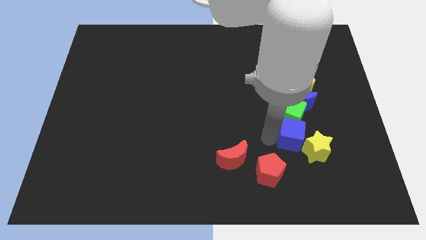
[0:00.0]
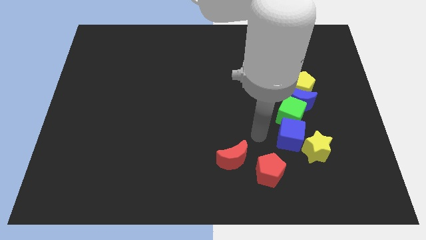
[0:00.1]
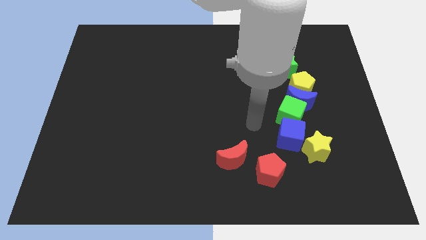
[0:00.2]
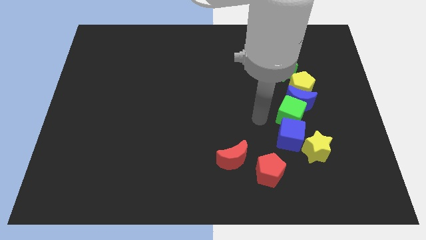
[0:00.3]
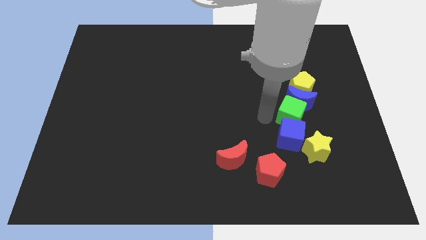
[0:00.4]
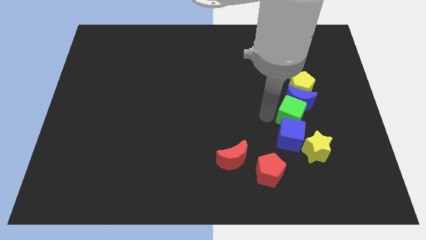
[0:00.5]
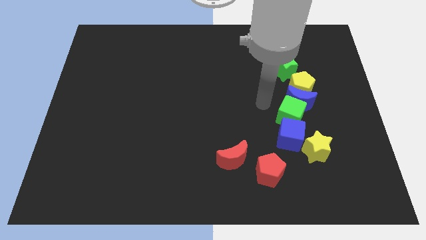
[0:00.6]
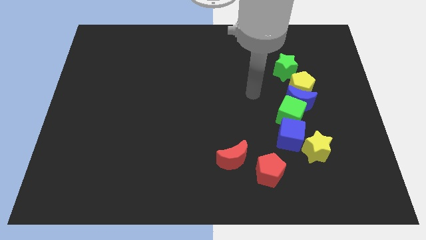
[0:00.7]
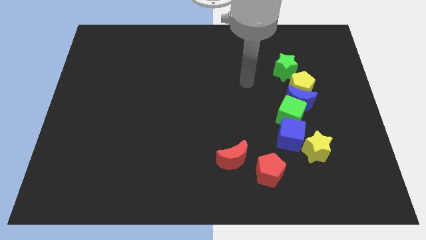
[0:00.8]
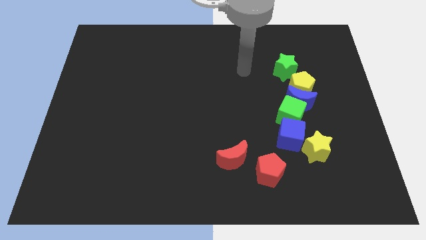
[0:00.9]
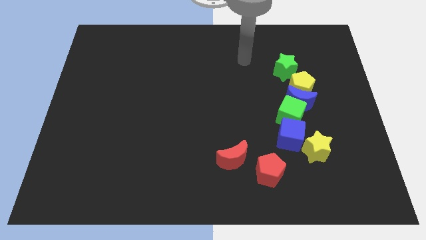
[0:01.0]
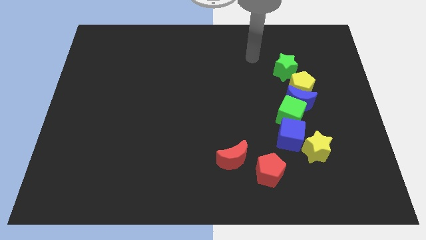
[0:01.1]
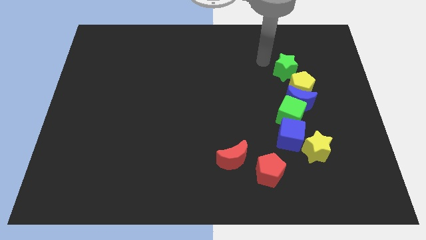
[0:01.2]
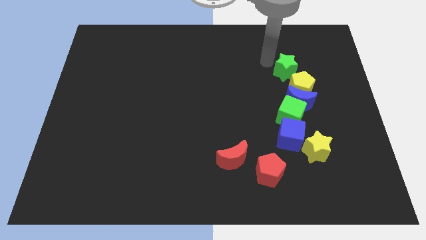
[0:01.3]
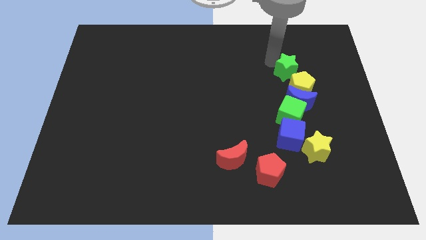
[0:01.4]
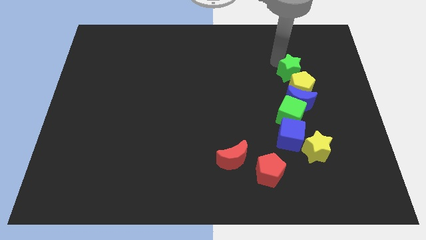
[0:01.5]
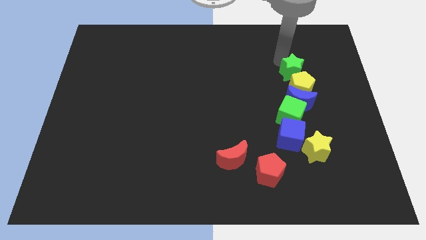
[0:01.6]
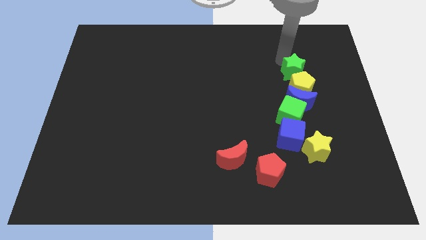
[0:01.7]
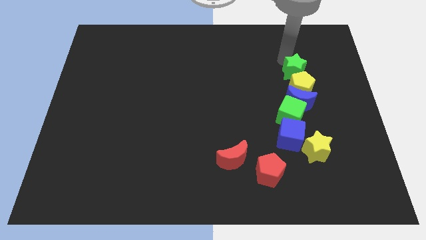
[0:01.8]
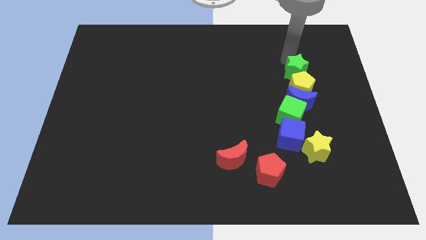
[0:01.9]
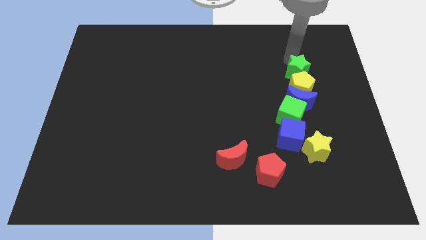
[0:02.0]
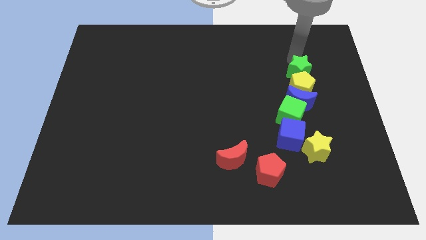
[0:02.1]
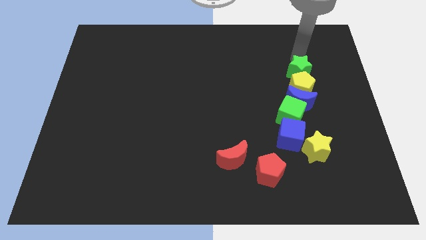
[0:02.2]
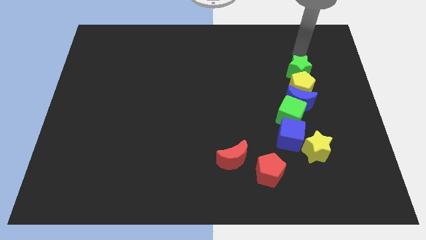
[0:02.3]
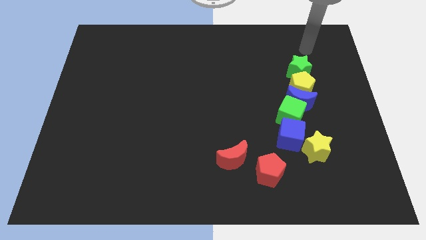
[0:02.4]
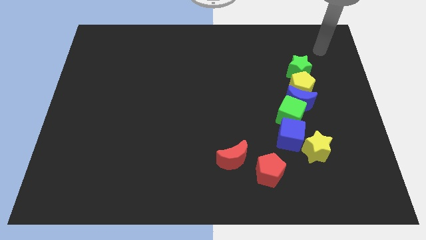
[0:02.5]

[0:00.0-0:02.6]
put the green star above the yellow pentagon

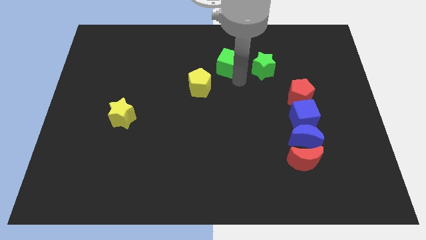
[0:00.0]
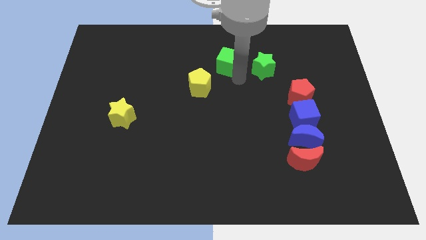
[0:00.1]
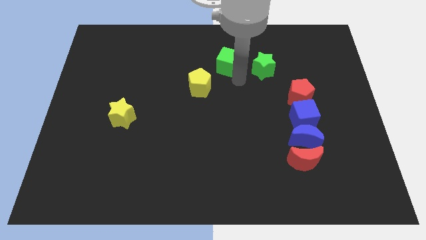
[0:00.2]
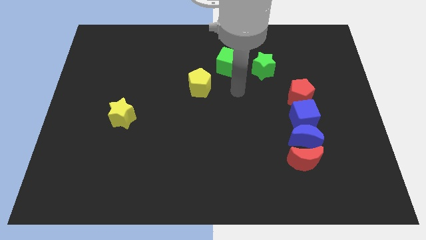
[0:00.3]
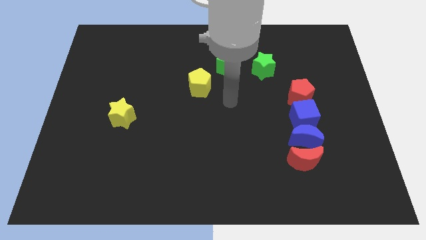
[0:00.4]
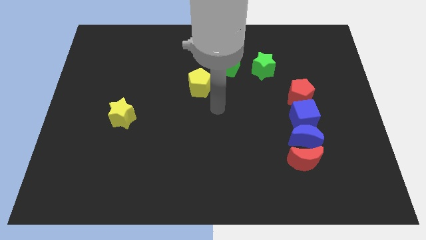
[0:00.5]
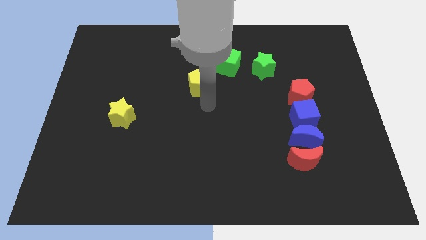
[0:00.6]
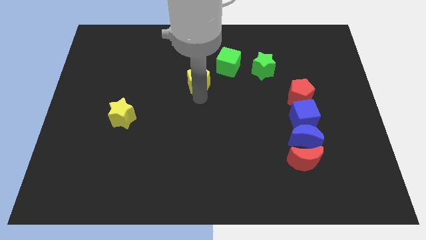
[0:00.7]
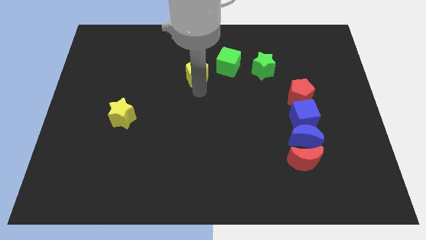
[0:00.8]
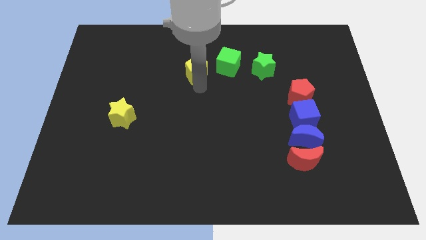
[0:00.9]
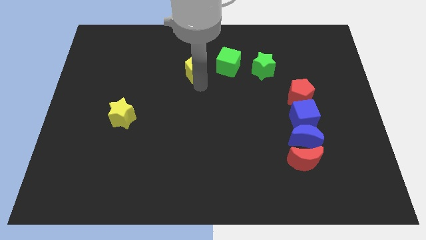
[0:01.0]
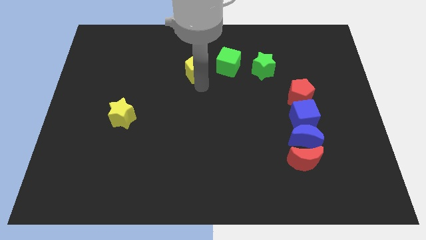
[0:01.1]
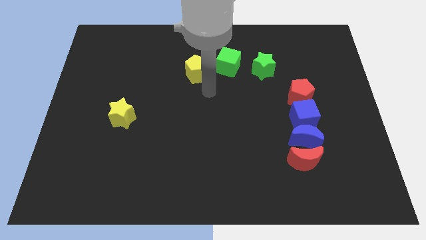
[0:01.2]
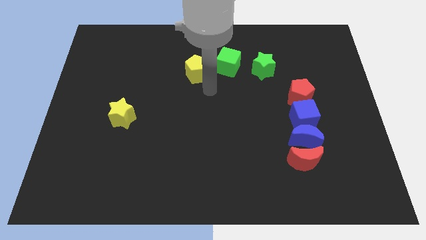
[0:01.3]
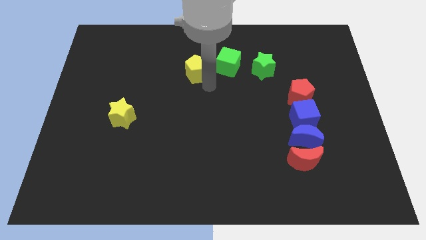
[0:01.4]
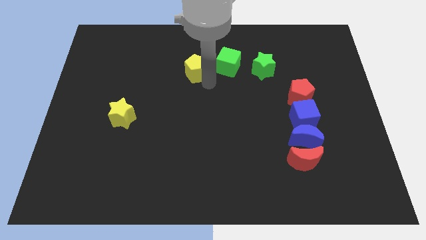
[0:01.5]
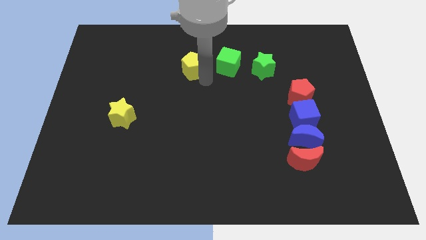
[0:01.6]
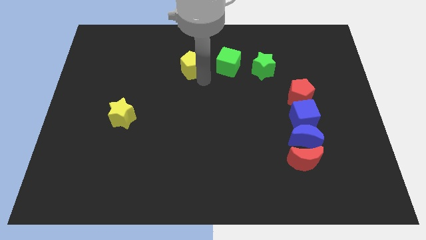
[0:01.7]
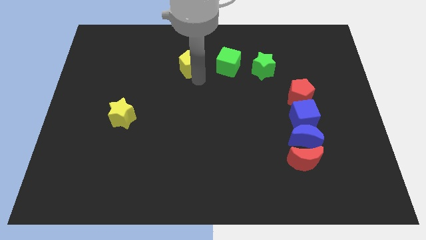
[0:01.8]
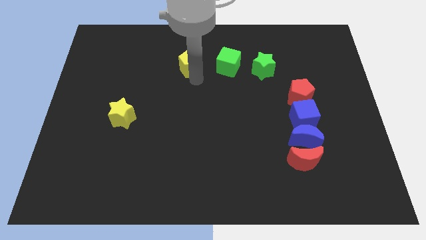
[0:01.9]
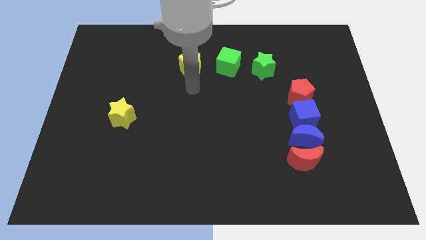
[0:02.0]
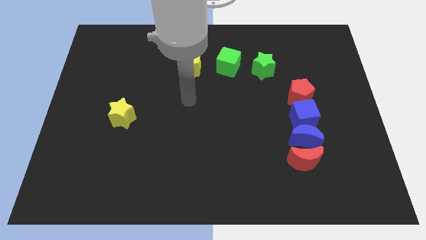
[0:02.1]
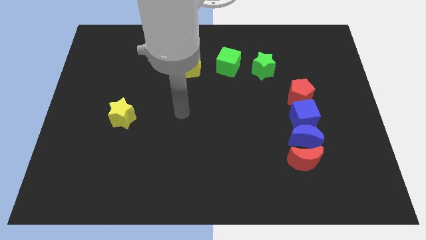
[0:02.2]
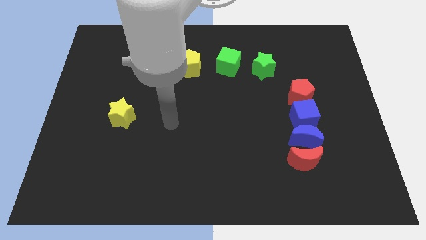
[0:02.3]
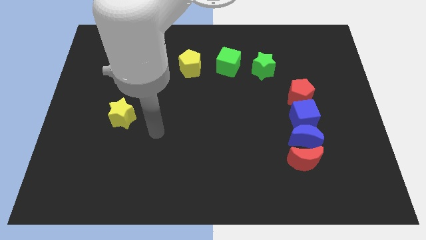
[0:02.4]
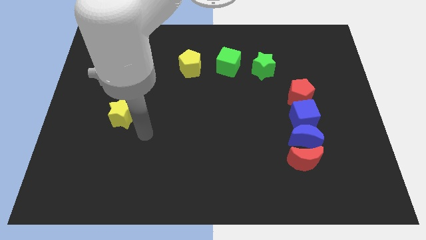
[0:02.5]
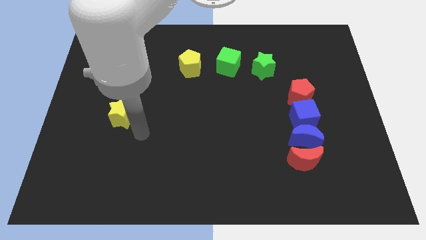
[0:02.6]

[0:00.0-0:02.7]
place the yellow pentagon left to the green cube

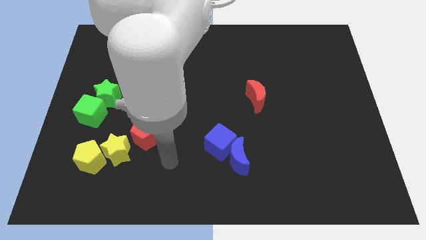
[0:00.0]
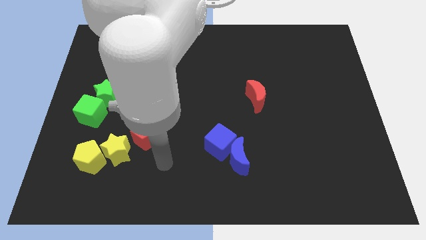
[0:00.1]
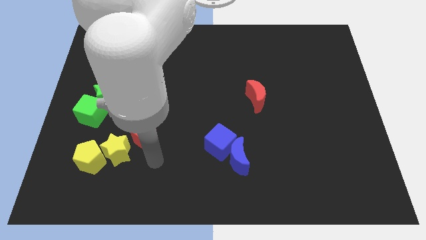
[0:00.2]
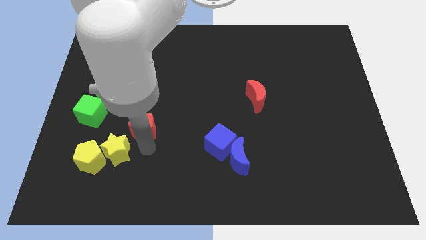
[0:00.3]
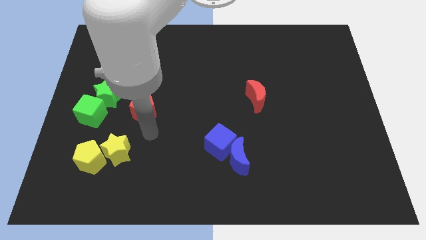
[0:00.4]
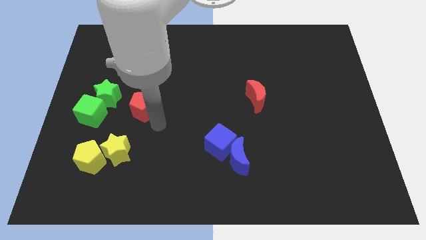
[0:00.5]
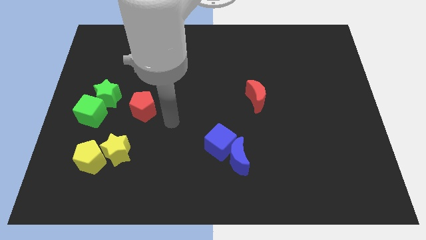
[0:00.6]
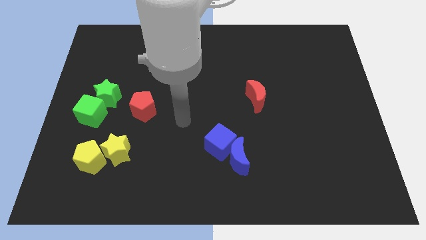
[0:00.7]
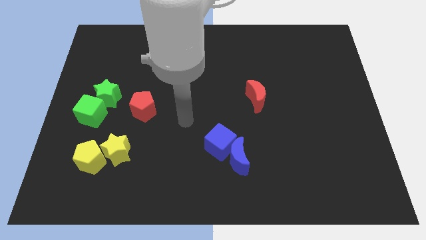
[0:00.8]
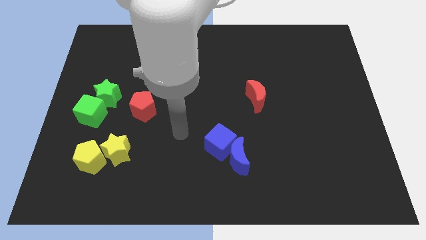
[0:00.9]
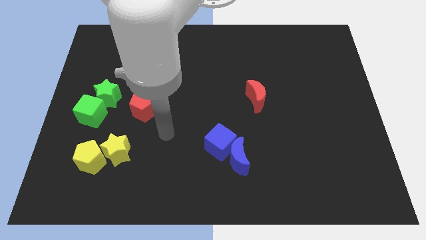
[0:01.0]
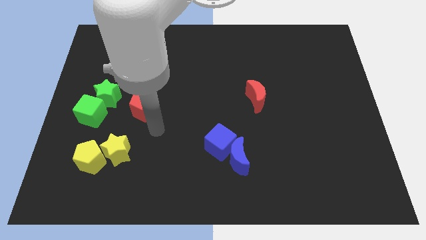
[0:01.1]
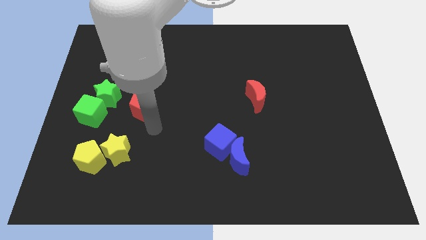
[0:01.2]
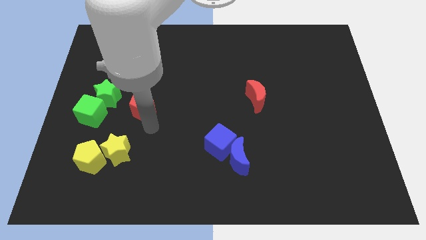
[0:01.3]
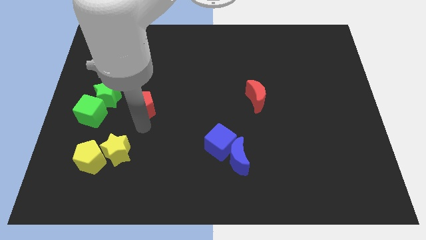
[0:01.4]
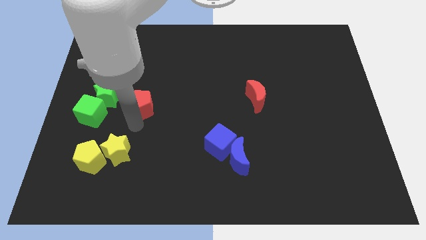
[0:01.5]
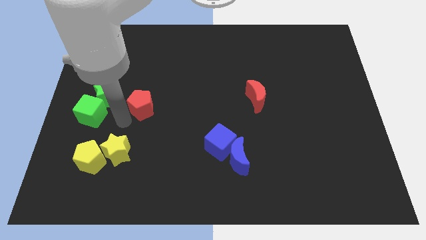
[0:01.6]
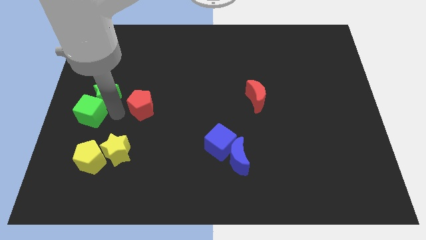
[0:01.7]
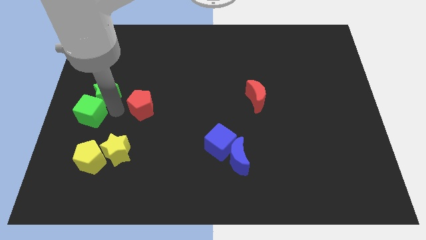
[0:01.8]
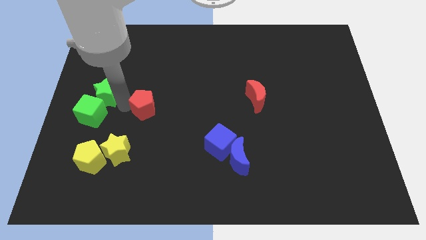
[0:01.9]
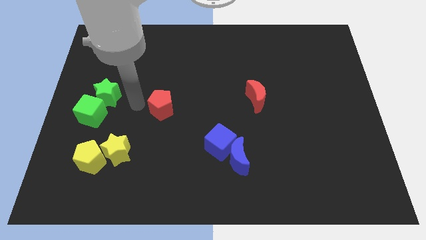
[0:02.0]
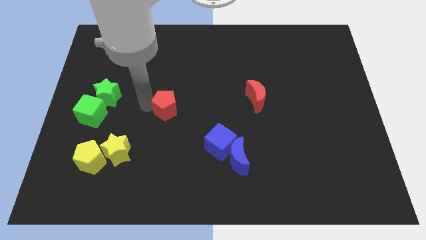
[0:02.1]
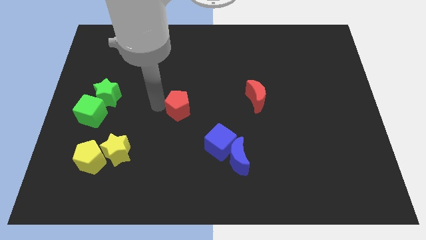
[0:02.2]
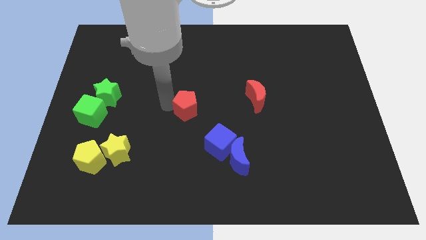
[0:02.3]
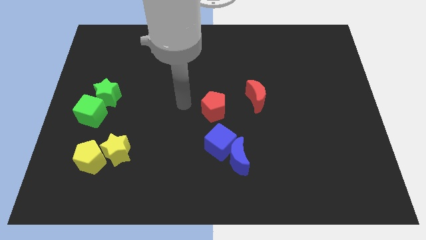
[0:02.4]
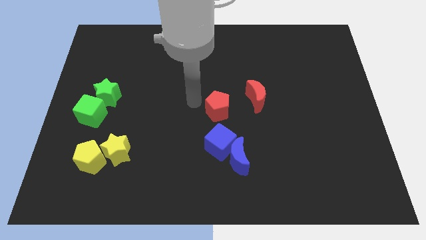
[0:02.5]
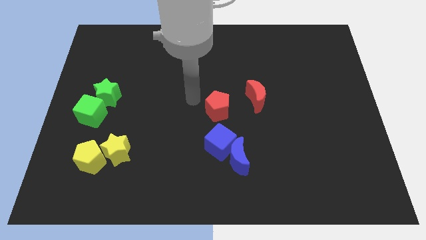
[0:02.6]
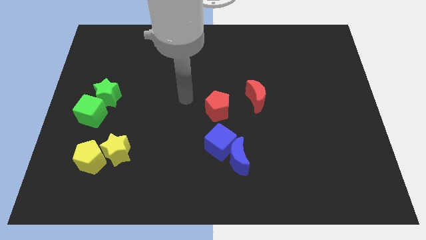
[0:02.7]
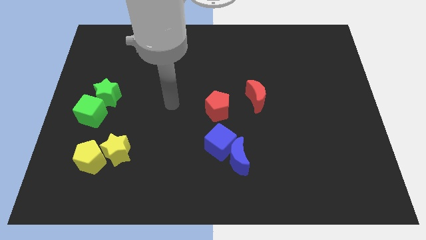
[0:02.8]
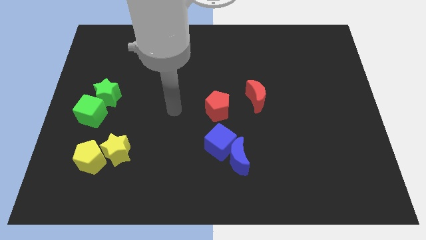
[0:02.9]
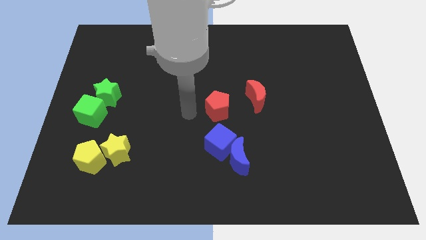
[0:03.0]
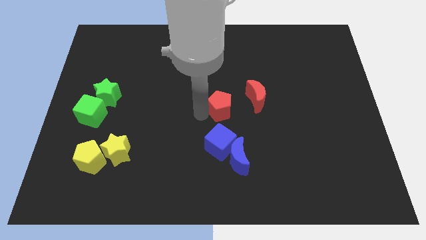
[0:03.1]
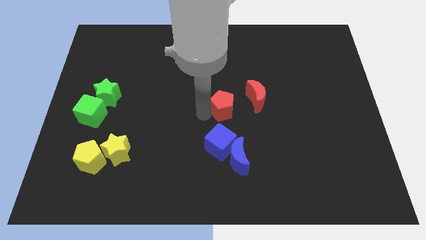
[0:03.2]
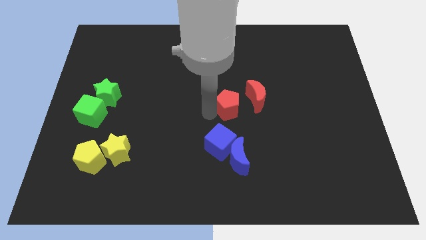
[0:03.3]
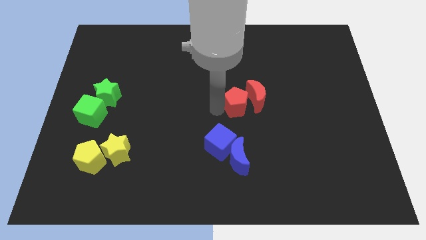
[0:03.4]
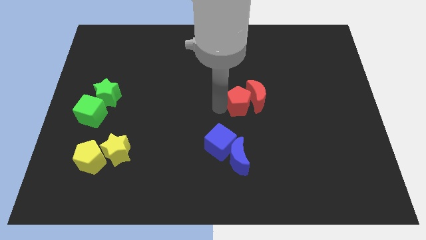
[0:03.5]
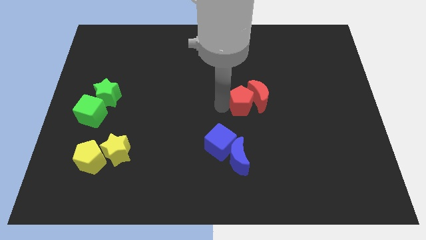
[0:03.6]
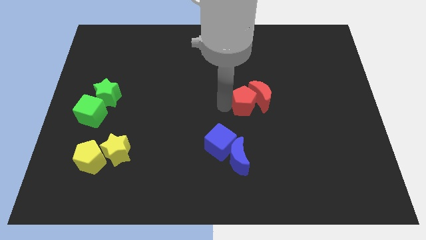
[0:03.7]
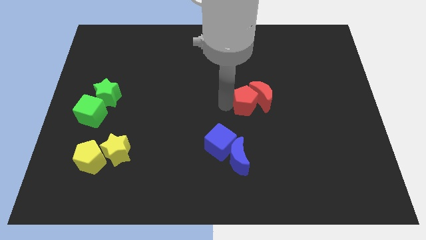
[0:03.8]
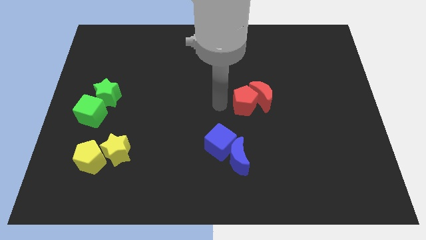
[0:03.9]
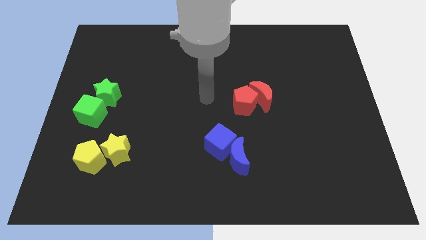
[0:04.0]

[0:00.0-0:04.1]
push the red pentagon into the left side of the red crescent
